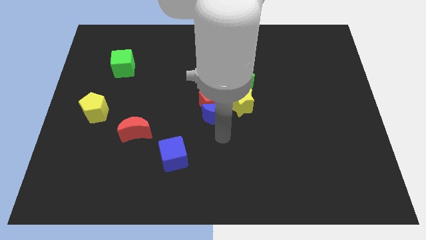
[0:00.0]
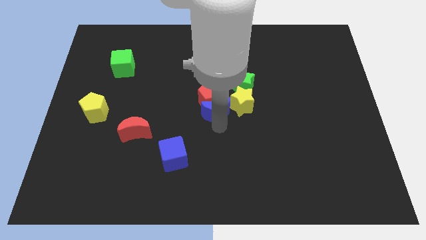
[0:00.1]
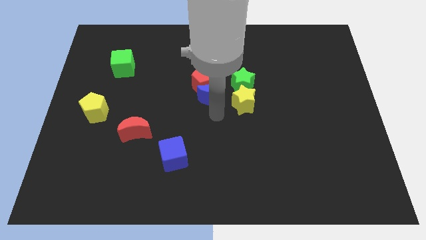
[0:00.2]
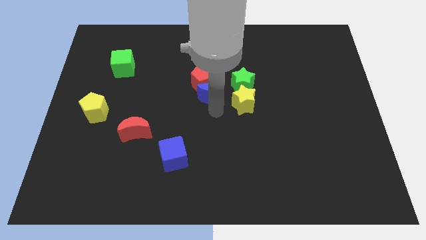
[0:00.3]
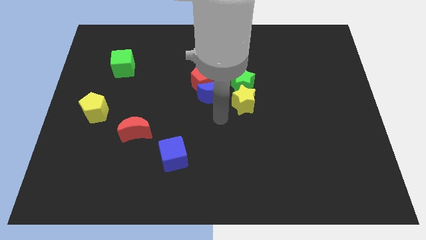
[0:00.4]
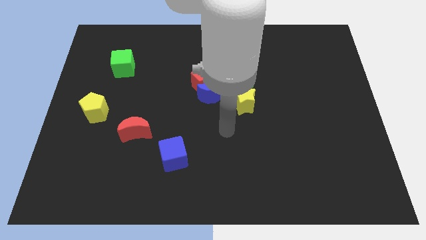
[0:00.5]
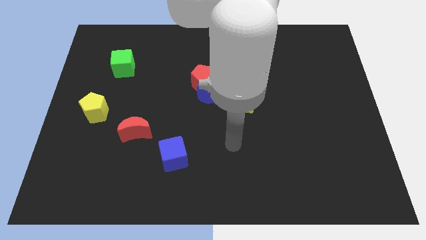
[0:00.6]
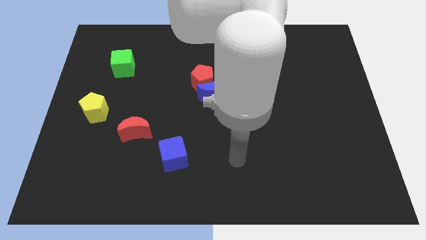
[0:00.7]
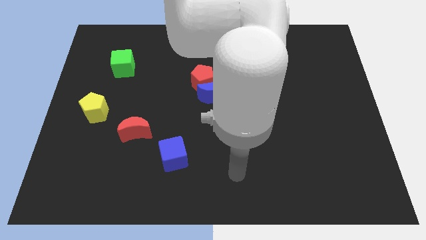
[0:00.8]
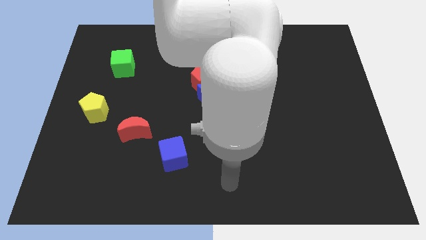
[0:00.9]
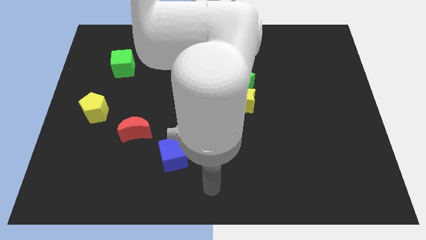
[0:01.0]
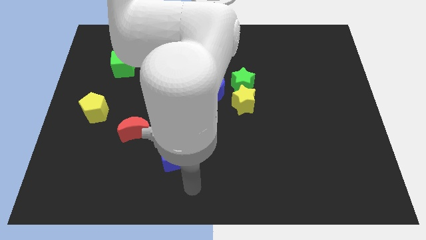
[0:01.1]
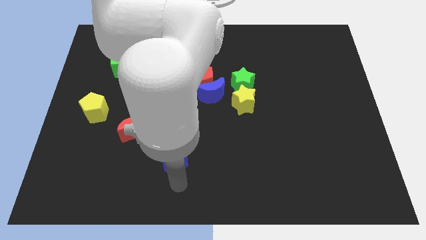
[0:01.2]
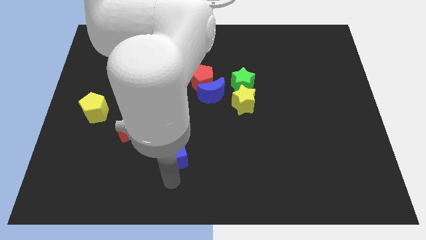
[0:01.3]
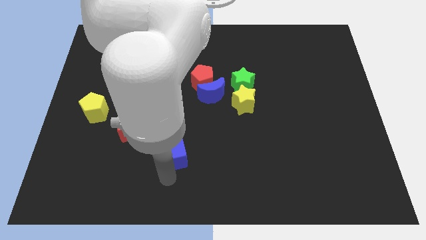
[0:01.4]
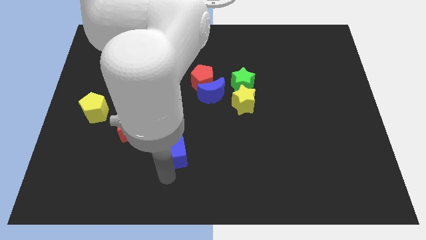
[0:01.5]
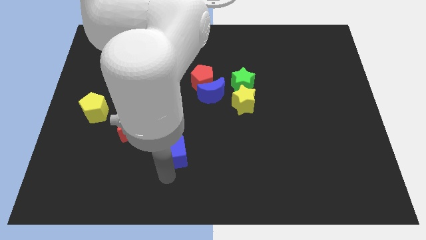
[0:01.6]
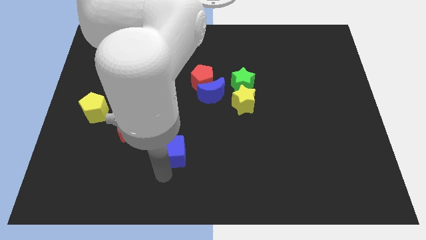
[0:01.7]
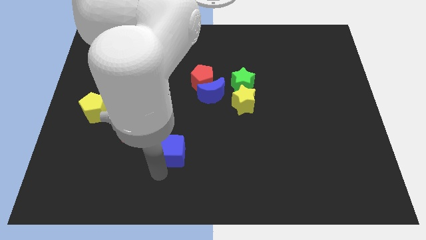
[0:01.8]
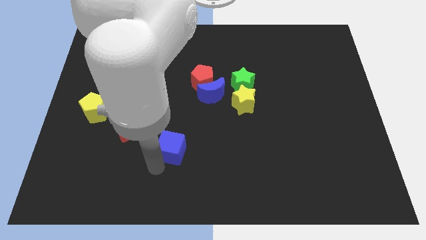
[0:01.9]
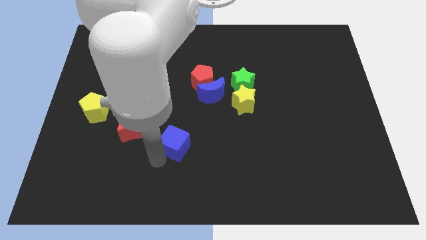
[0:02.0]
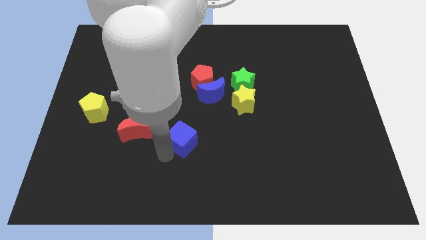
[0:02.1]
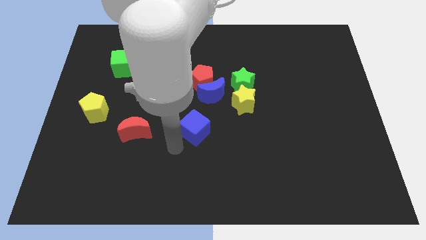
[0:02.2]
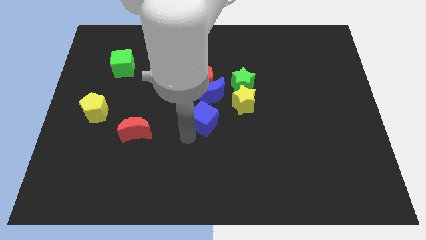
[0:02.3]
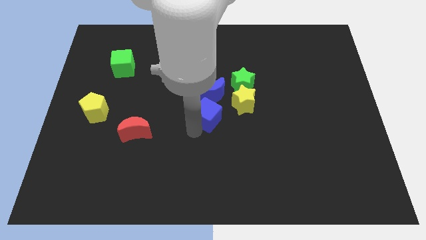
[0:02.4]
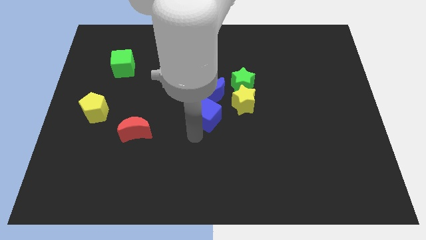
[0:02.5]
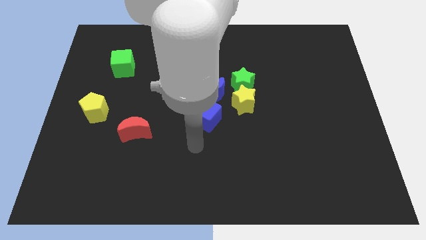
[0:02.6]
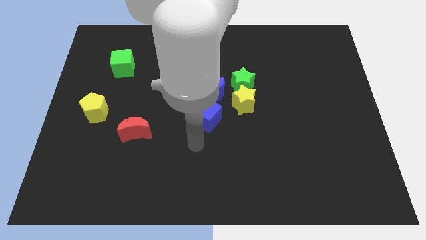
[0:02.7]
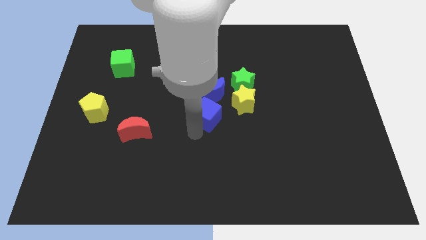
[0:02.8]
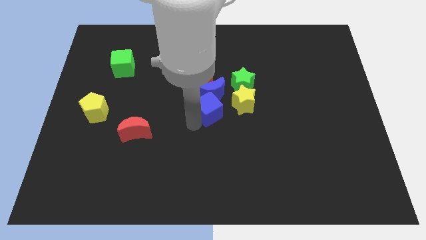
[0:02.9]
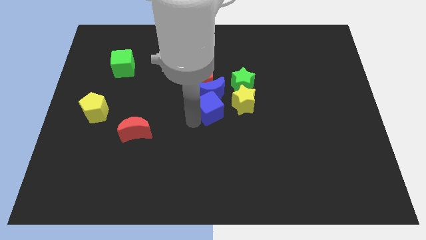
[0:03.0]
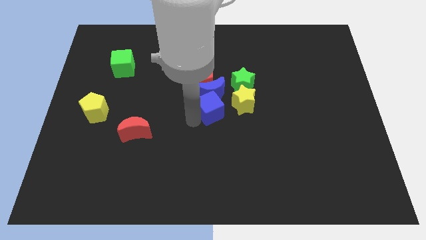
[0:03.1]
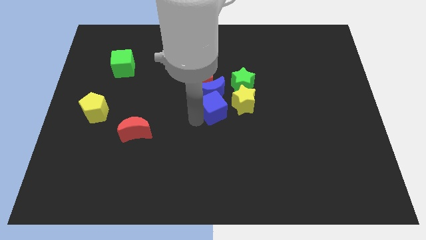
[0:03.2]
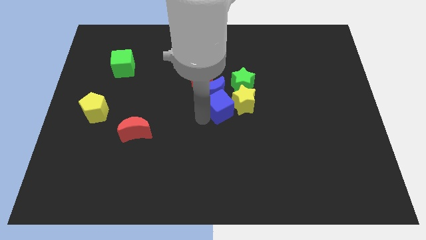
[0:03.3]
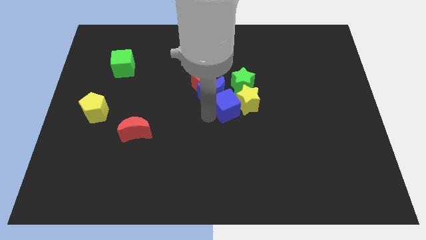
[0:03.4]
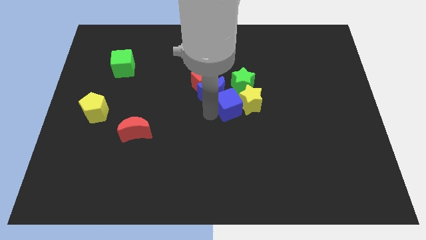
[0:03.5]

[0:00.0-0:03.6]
move the blue cube below the blue moon

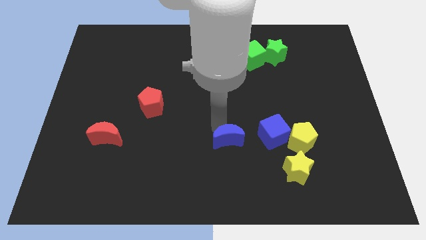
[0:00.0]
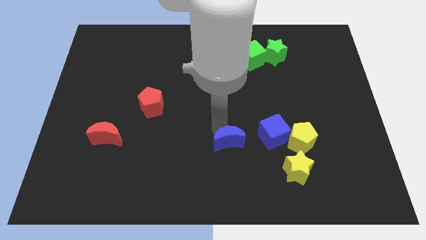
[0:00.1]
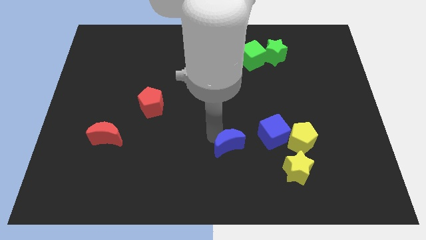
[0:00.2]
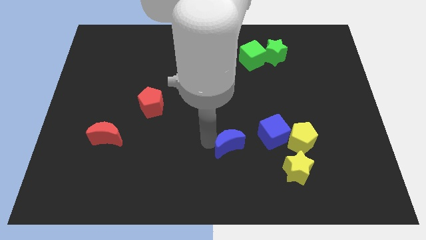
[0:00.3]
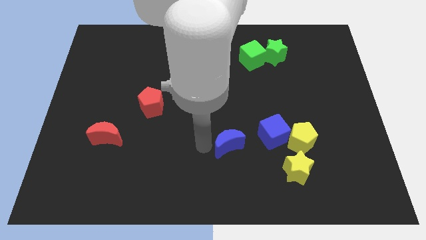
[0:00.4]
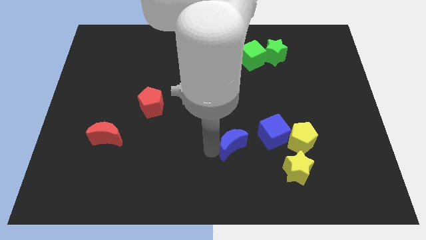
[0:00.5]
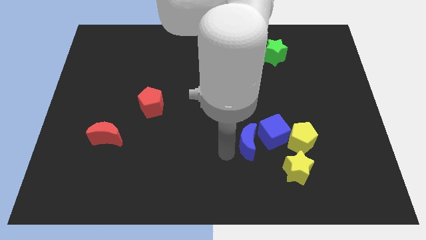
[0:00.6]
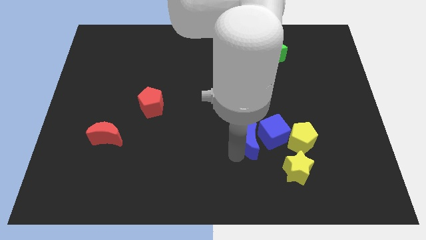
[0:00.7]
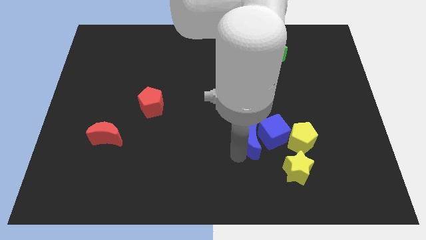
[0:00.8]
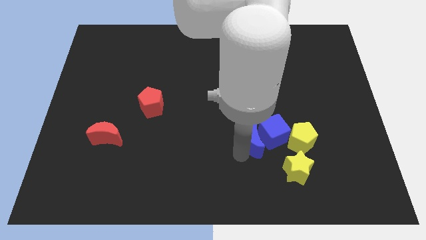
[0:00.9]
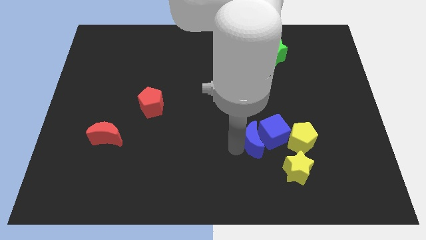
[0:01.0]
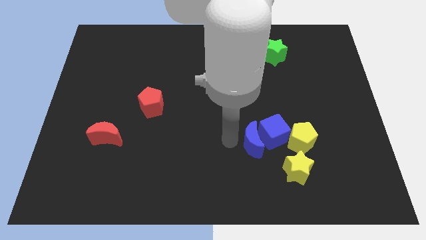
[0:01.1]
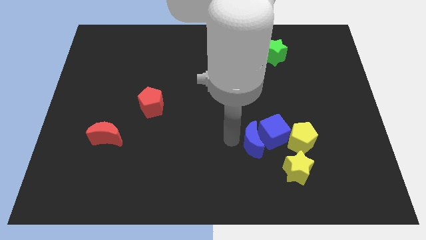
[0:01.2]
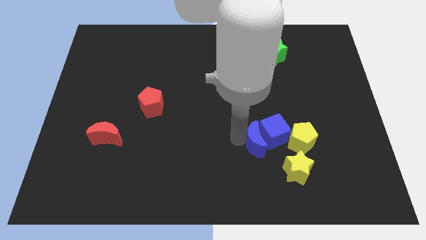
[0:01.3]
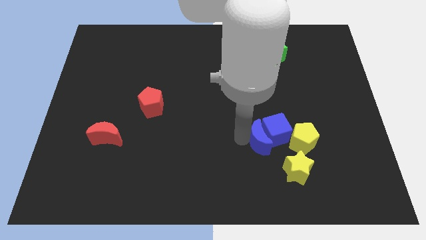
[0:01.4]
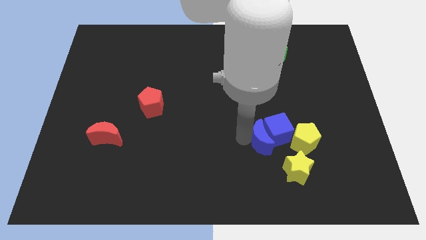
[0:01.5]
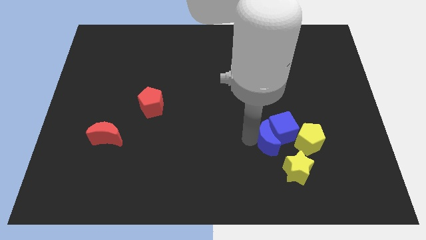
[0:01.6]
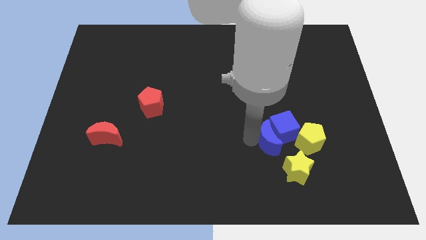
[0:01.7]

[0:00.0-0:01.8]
move the blue moon into the blue cube

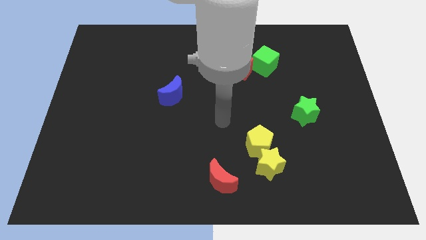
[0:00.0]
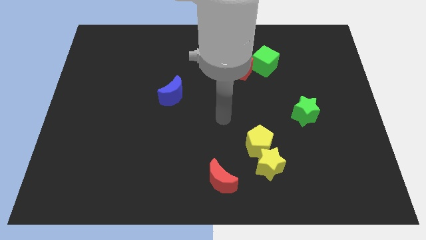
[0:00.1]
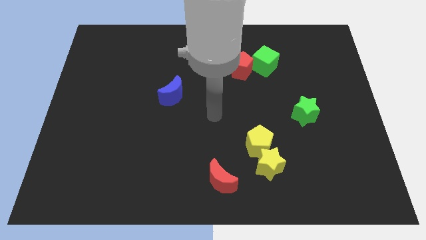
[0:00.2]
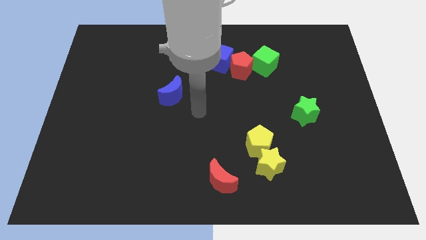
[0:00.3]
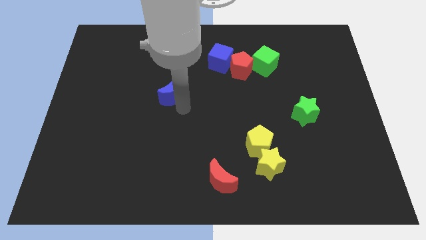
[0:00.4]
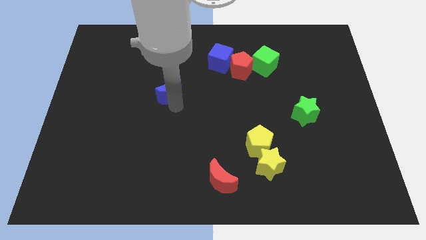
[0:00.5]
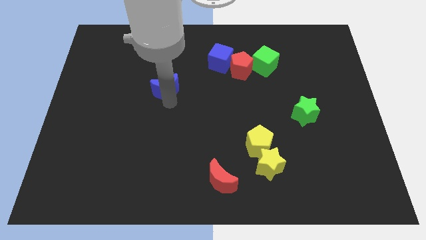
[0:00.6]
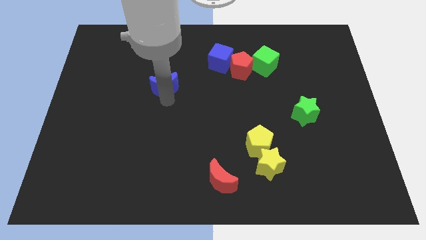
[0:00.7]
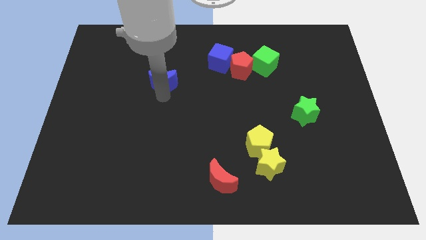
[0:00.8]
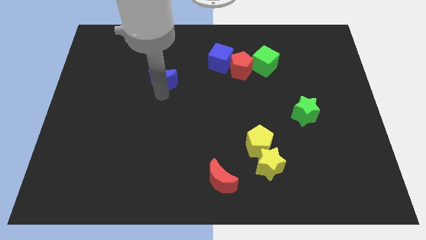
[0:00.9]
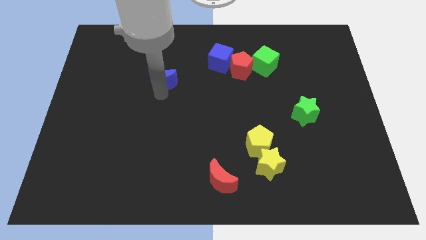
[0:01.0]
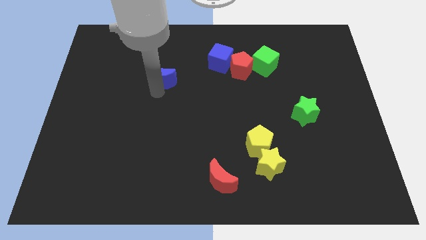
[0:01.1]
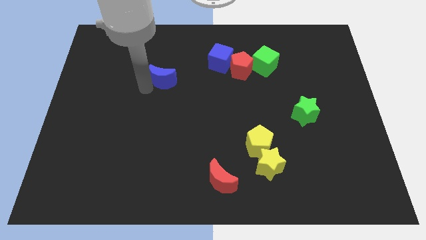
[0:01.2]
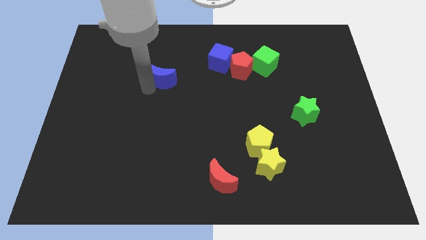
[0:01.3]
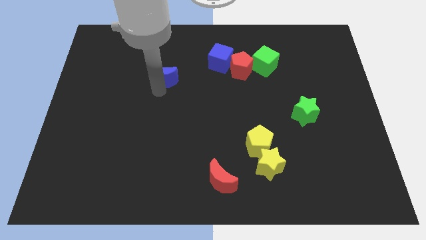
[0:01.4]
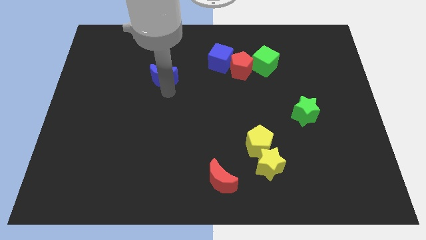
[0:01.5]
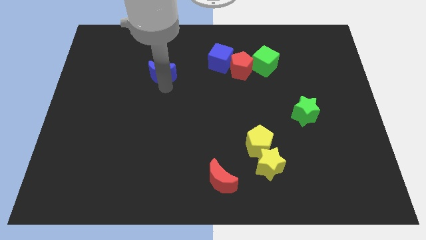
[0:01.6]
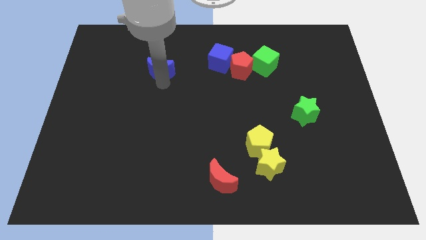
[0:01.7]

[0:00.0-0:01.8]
slightly move the blue crescent left to the blue cube

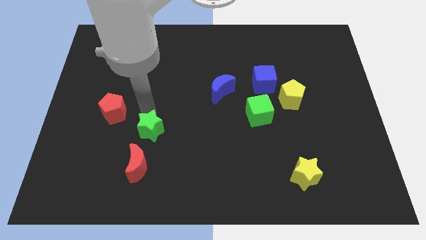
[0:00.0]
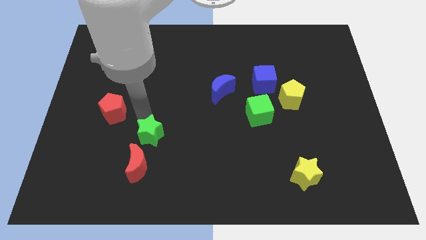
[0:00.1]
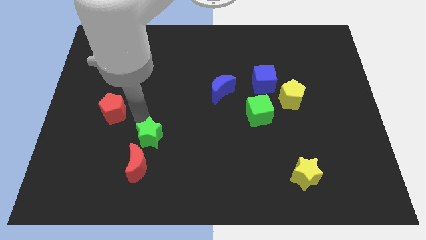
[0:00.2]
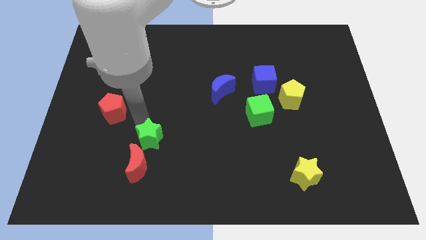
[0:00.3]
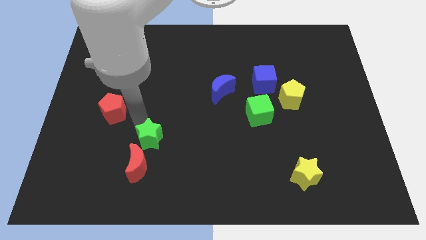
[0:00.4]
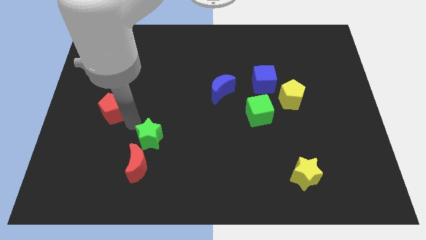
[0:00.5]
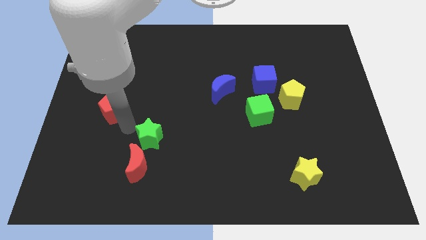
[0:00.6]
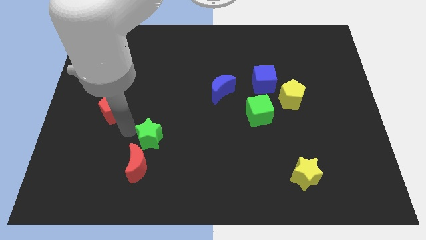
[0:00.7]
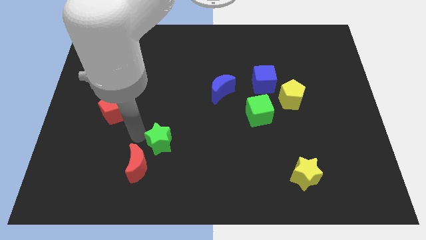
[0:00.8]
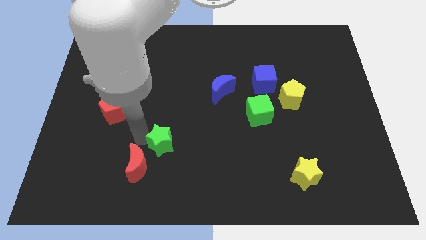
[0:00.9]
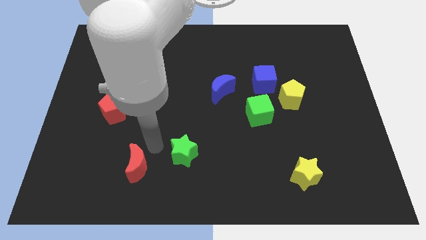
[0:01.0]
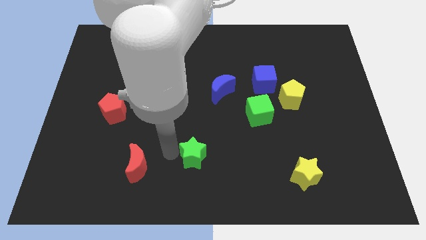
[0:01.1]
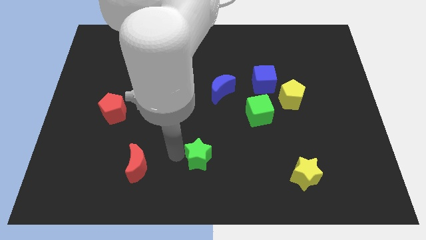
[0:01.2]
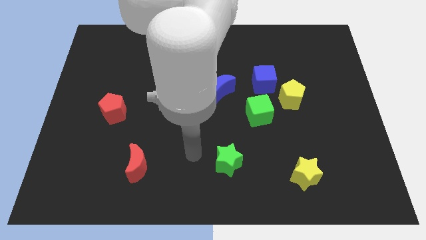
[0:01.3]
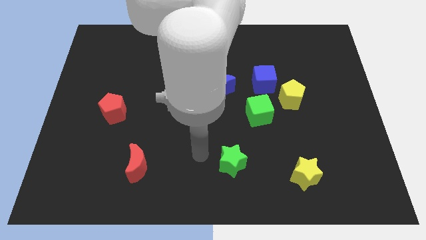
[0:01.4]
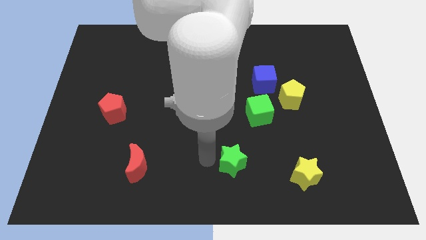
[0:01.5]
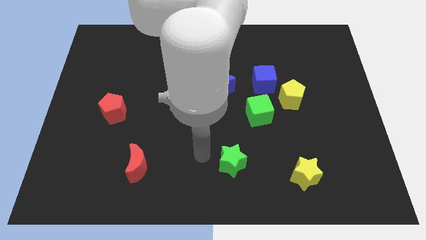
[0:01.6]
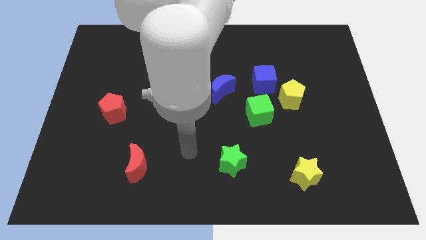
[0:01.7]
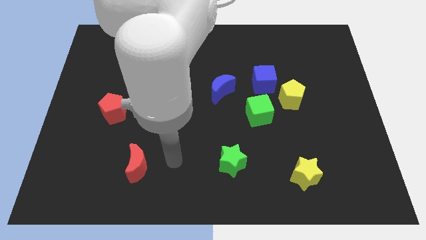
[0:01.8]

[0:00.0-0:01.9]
place the green star vertically below the blue crescent
